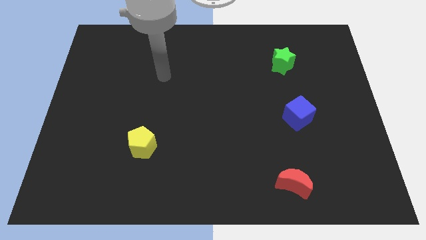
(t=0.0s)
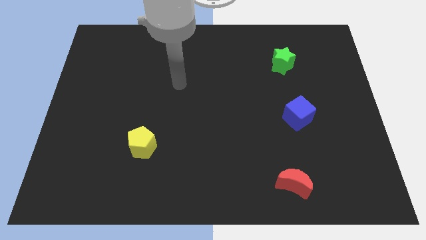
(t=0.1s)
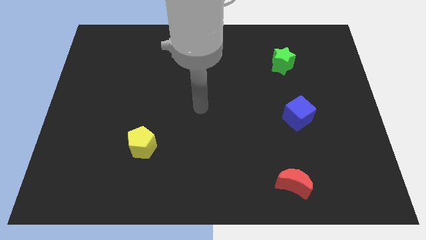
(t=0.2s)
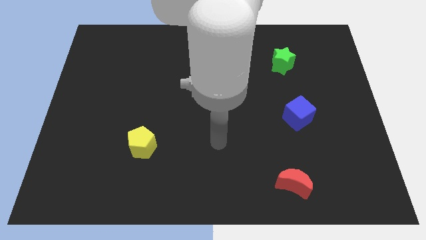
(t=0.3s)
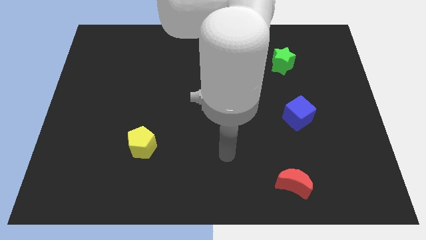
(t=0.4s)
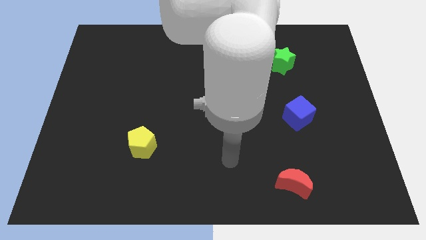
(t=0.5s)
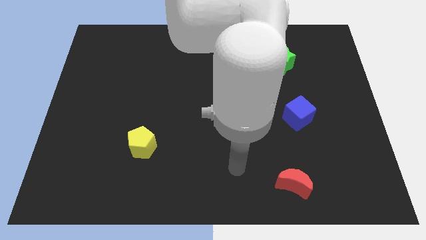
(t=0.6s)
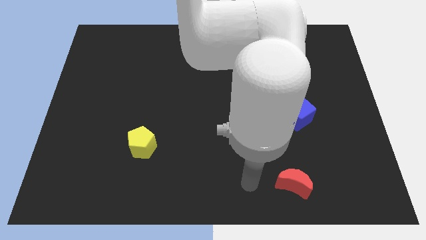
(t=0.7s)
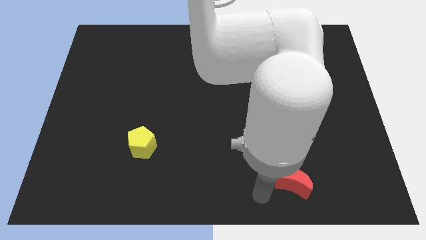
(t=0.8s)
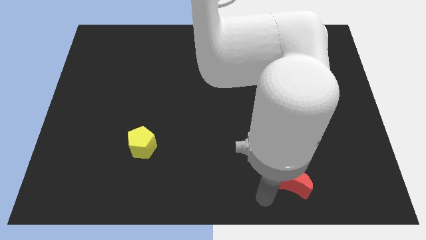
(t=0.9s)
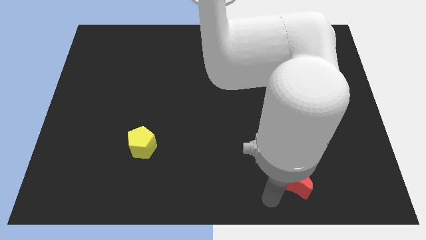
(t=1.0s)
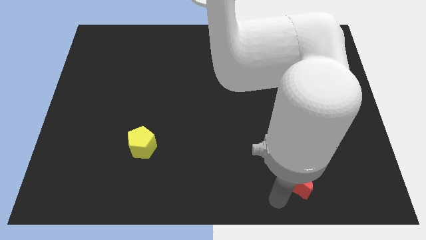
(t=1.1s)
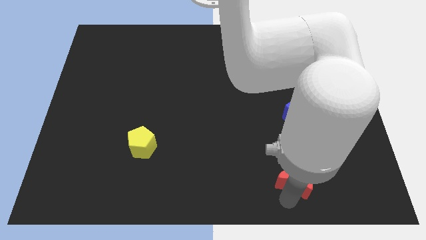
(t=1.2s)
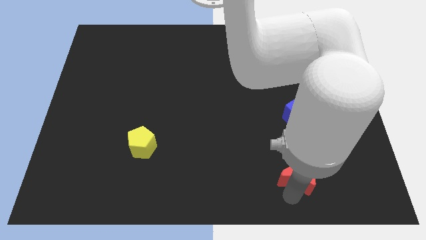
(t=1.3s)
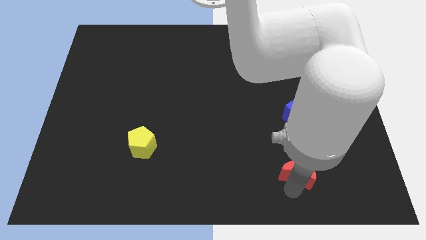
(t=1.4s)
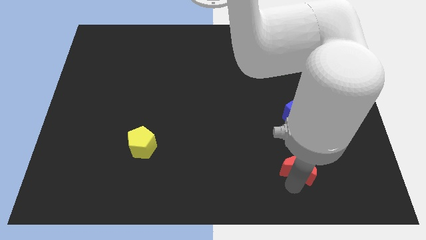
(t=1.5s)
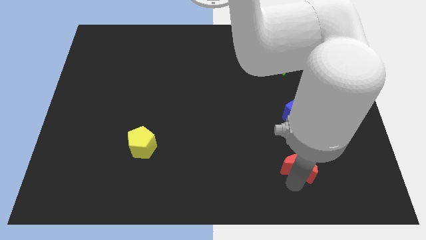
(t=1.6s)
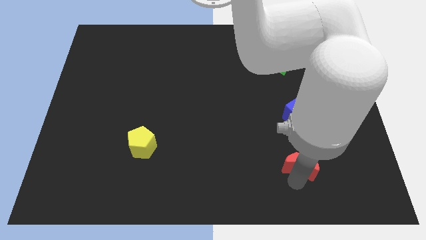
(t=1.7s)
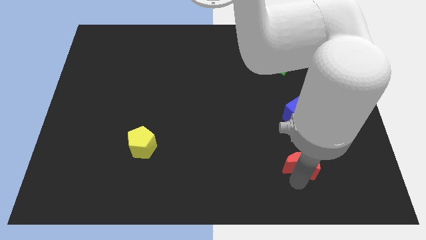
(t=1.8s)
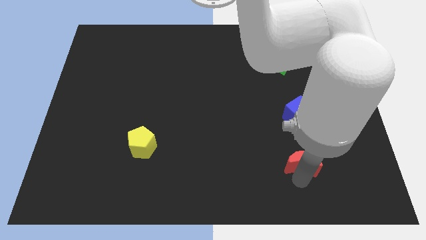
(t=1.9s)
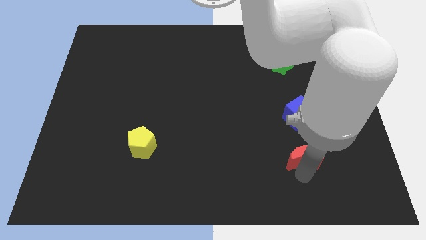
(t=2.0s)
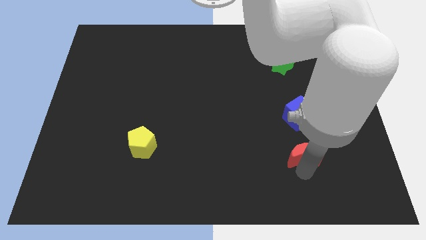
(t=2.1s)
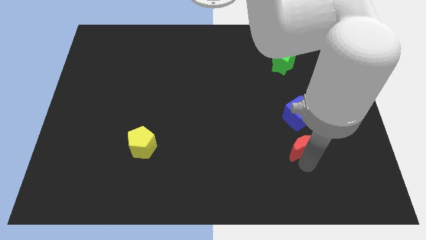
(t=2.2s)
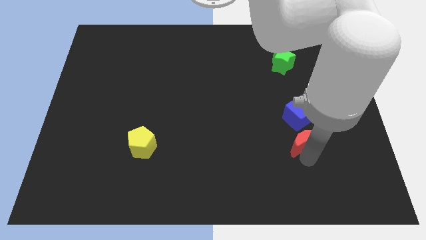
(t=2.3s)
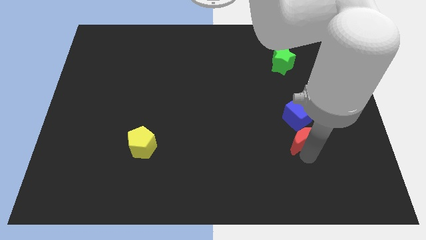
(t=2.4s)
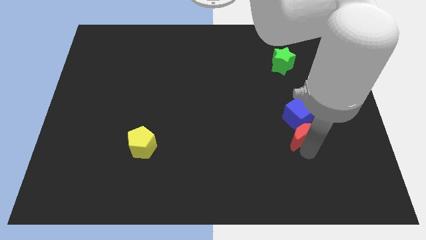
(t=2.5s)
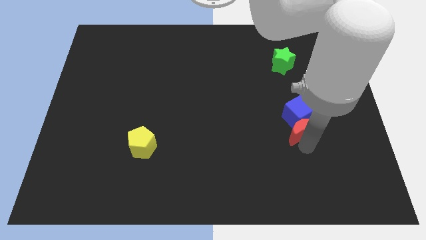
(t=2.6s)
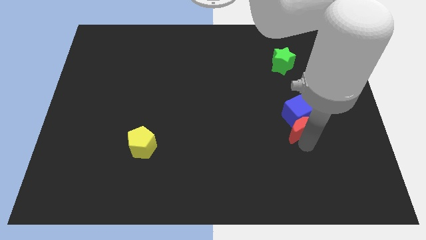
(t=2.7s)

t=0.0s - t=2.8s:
put the red moon next to the cube

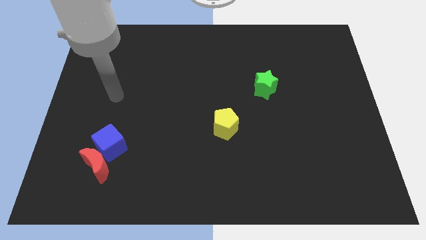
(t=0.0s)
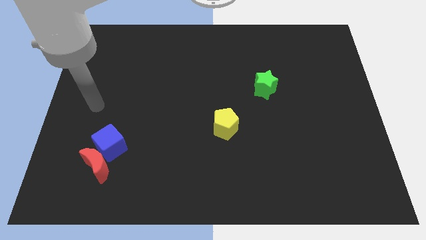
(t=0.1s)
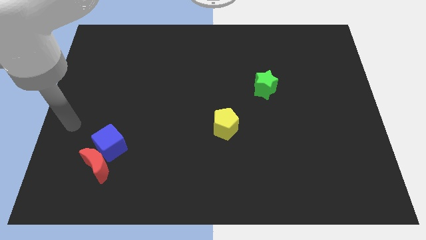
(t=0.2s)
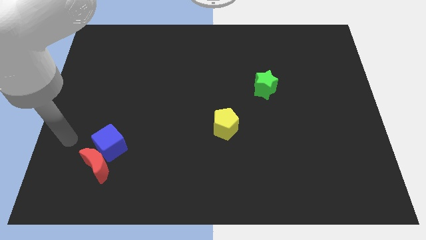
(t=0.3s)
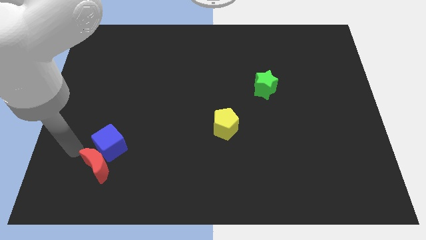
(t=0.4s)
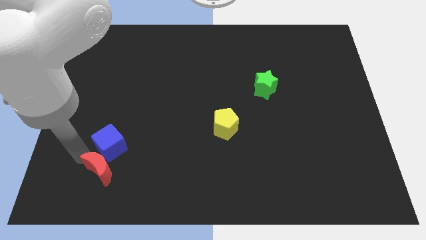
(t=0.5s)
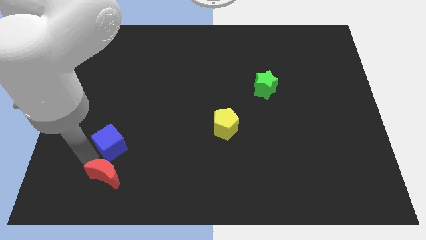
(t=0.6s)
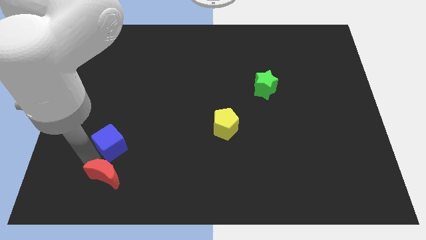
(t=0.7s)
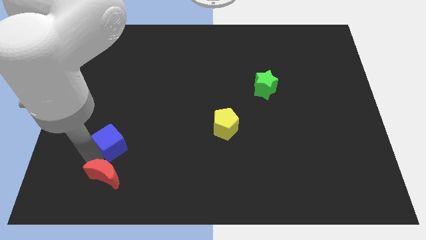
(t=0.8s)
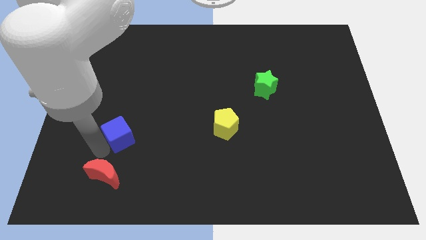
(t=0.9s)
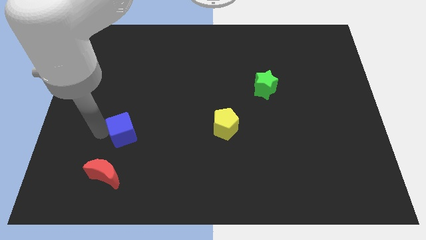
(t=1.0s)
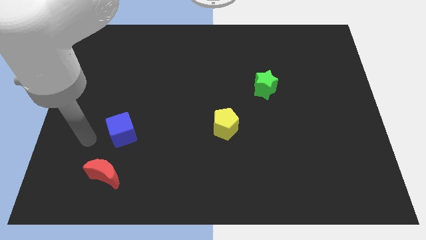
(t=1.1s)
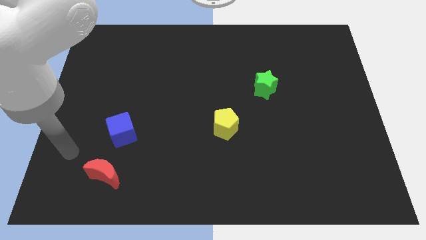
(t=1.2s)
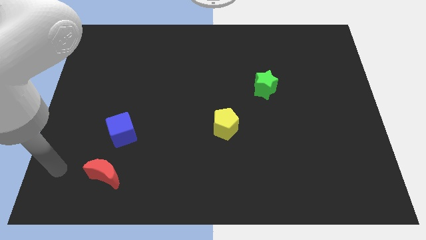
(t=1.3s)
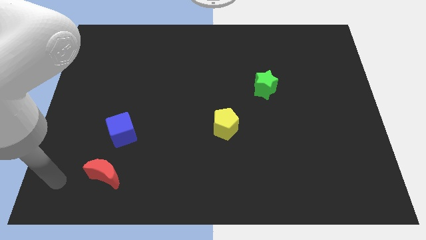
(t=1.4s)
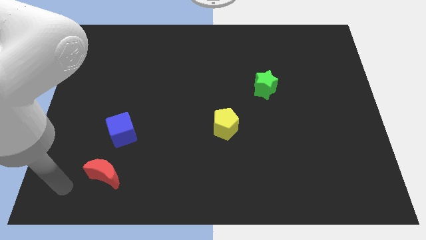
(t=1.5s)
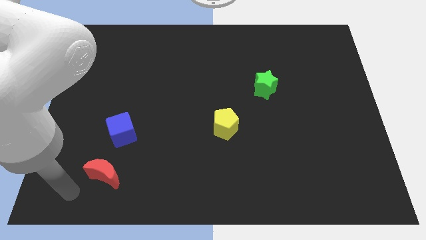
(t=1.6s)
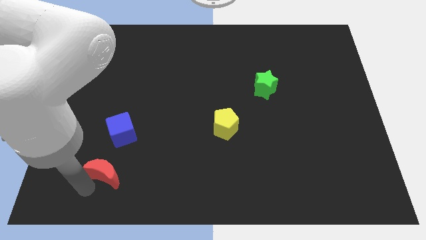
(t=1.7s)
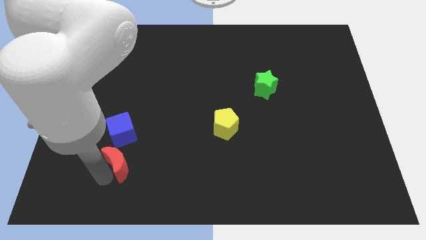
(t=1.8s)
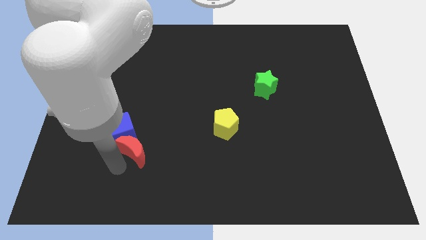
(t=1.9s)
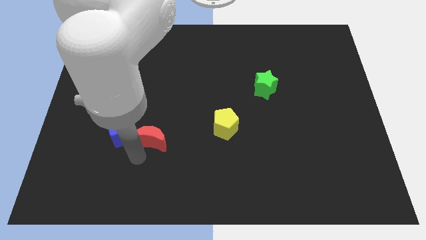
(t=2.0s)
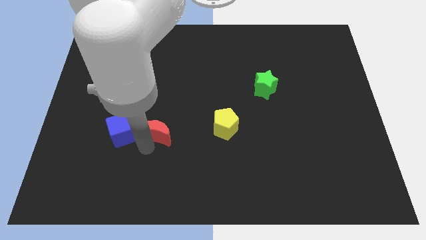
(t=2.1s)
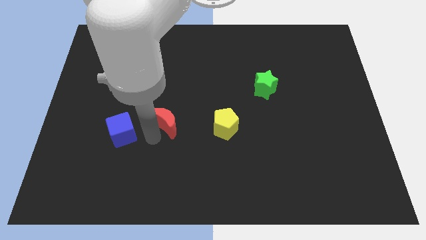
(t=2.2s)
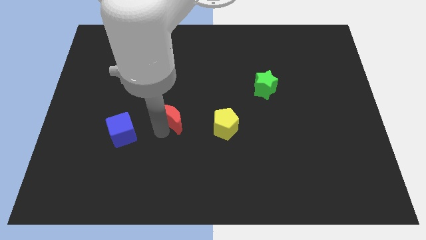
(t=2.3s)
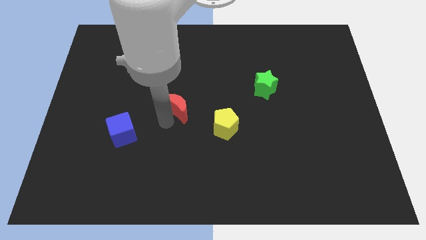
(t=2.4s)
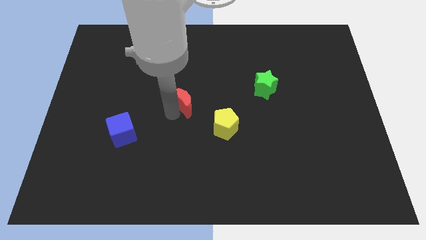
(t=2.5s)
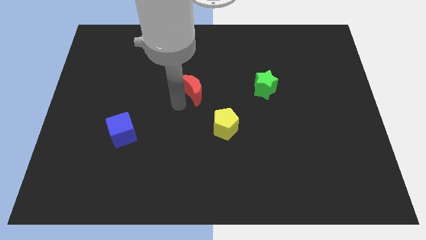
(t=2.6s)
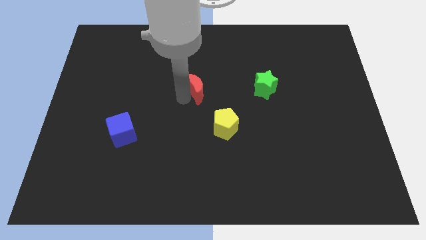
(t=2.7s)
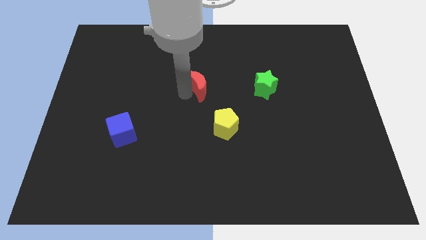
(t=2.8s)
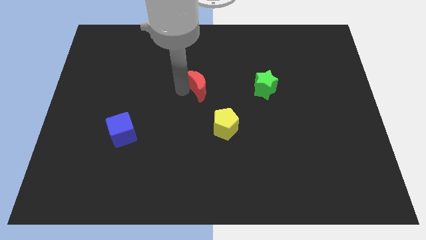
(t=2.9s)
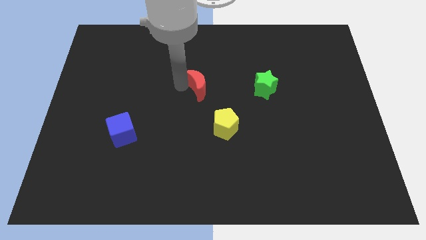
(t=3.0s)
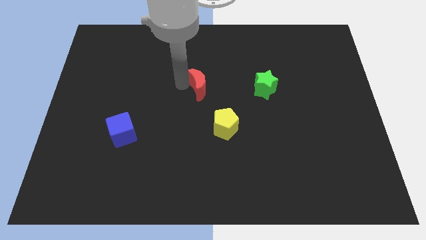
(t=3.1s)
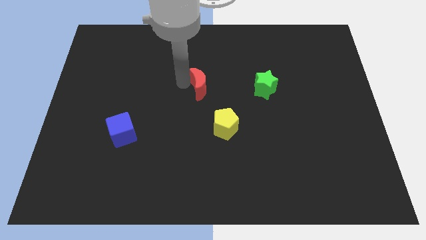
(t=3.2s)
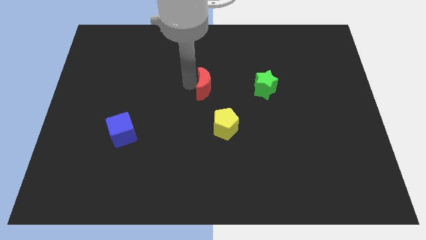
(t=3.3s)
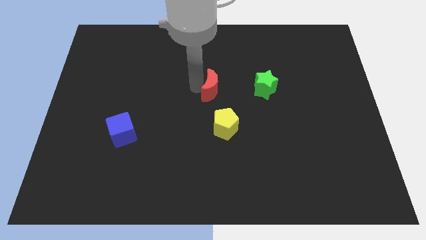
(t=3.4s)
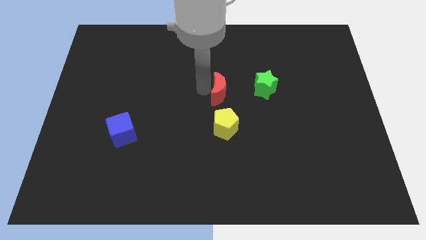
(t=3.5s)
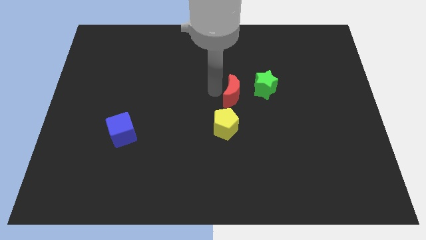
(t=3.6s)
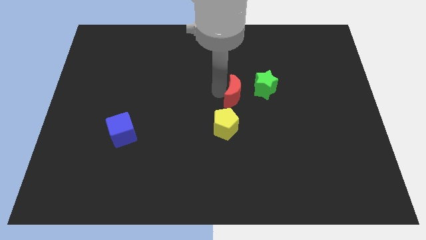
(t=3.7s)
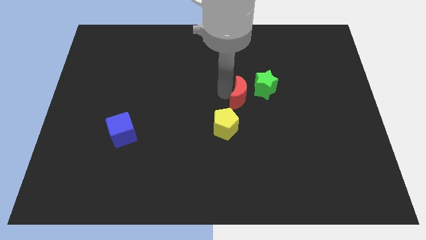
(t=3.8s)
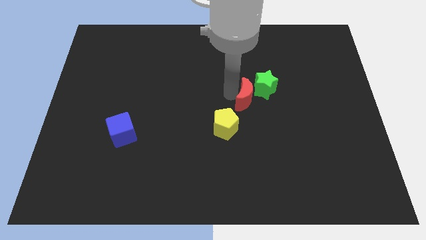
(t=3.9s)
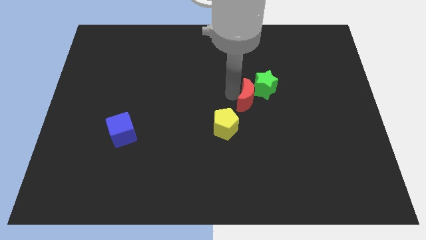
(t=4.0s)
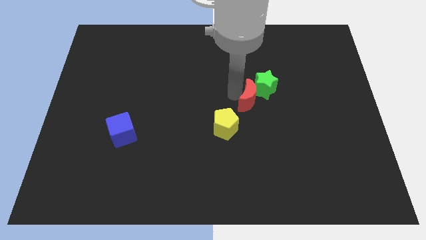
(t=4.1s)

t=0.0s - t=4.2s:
move the red moon close to the green block

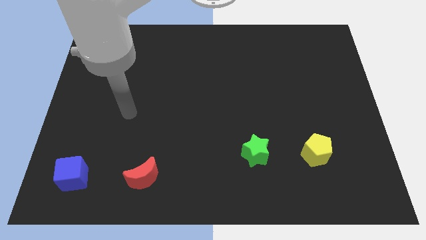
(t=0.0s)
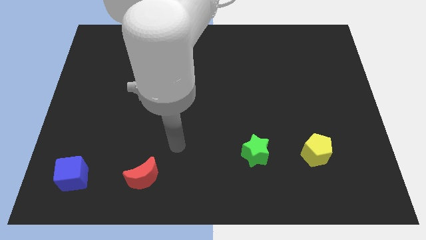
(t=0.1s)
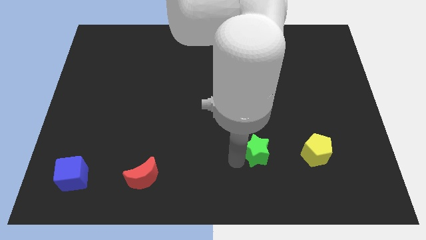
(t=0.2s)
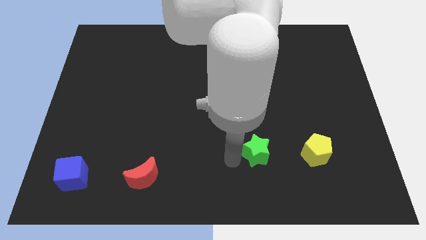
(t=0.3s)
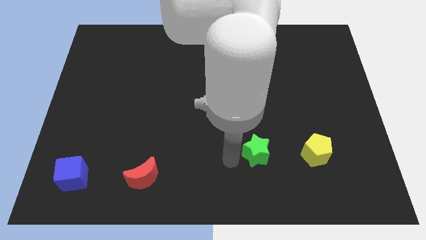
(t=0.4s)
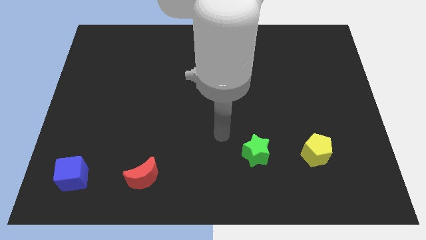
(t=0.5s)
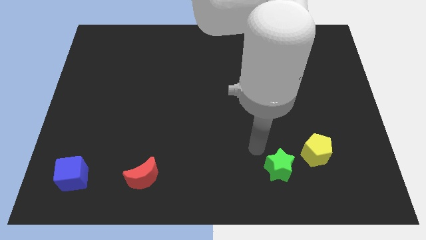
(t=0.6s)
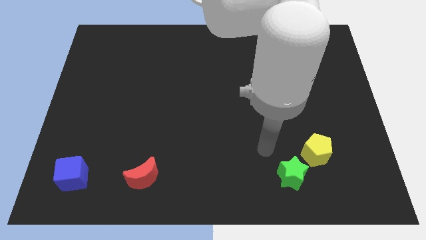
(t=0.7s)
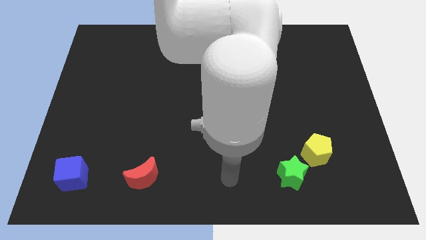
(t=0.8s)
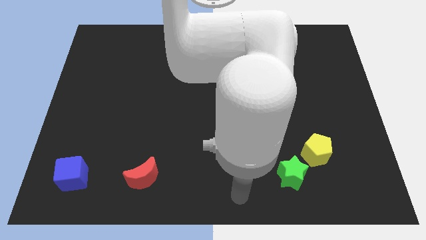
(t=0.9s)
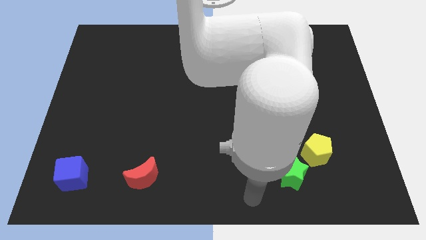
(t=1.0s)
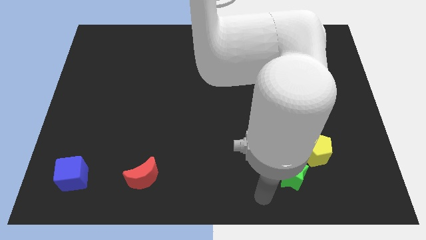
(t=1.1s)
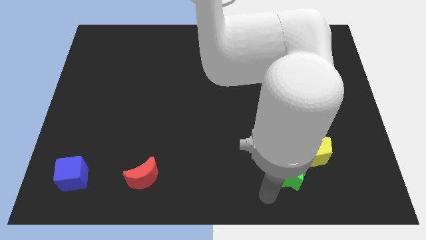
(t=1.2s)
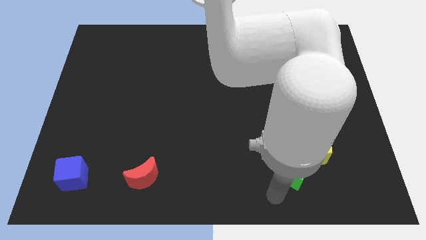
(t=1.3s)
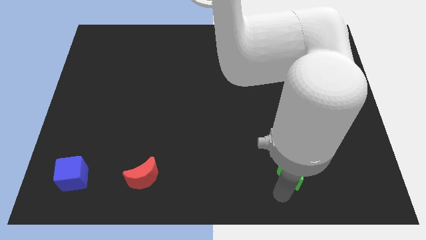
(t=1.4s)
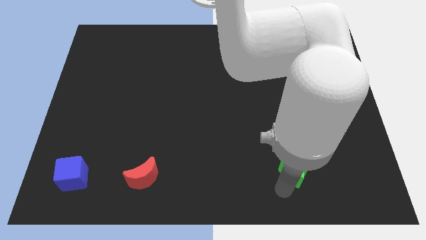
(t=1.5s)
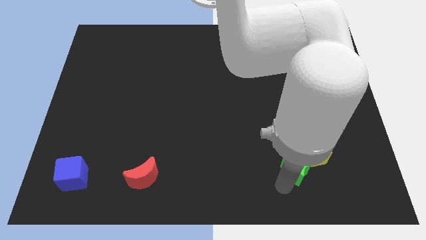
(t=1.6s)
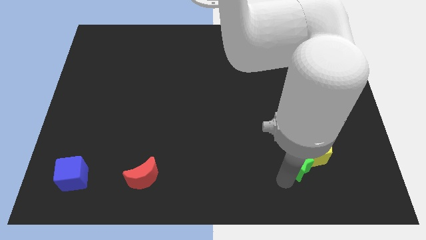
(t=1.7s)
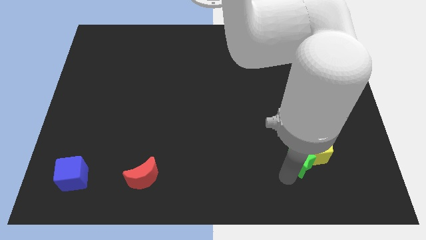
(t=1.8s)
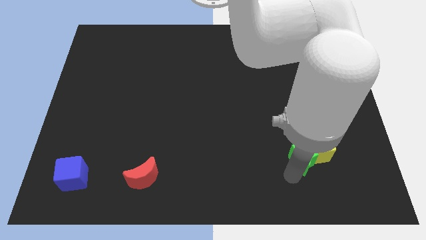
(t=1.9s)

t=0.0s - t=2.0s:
put the star close to the yellow pentagon
